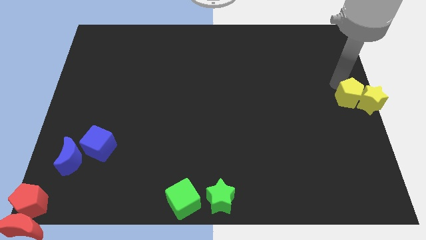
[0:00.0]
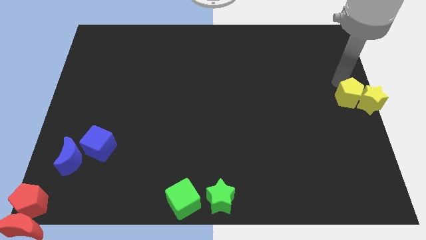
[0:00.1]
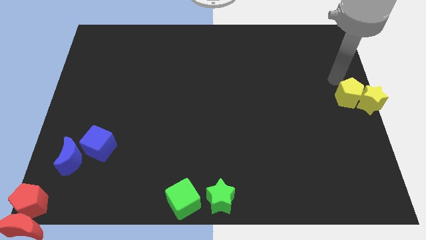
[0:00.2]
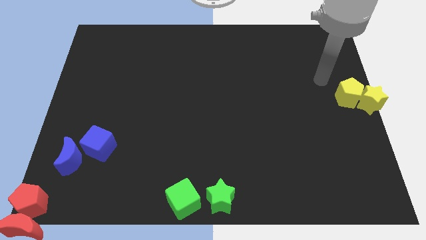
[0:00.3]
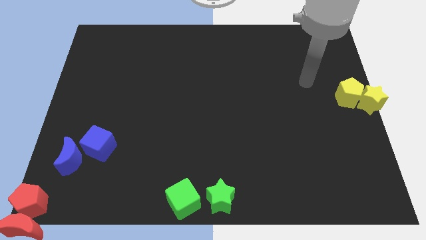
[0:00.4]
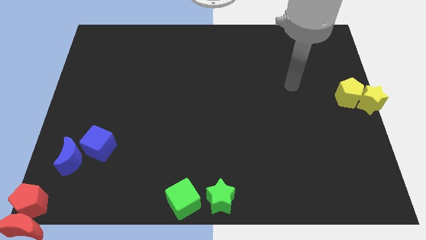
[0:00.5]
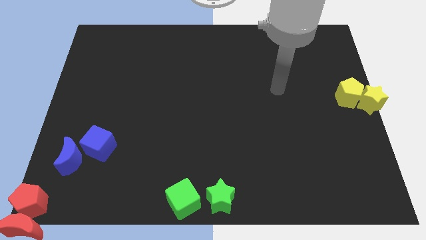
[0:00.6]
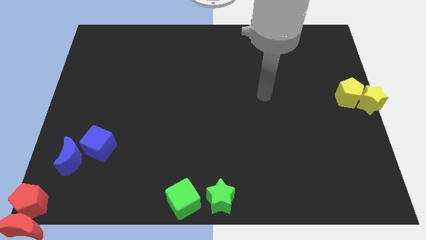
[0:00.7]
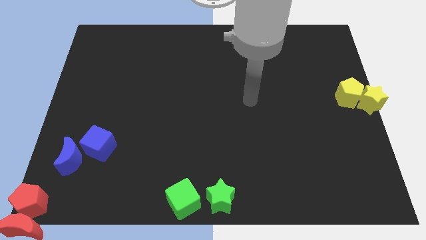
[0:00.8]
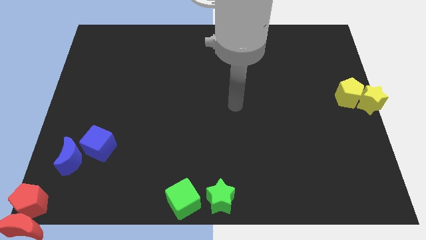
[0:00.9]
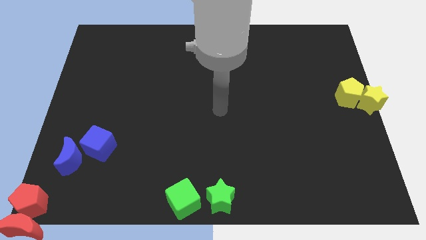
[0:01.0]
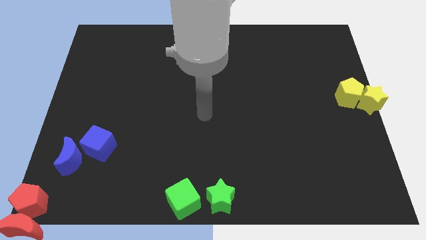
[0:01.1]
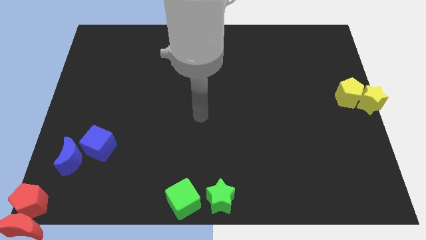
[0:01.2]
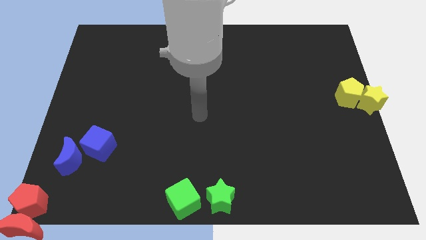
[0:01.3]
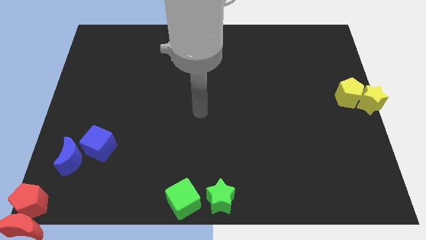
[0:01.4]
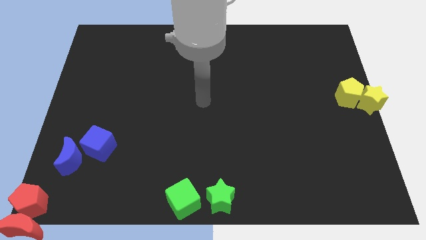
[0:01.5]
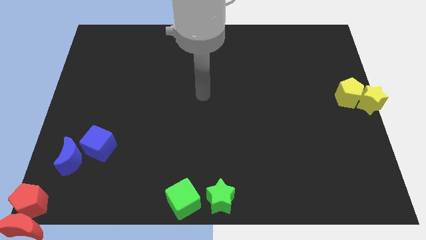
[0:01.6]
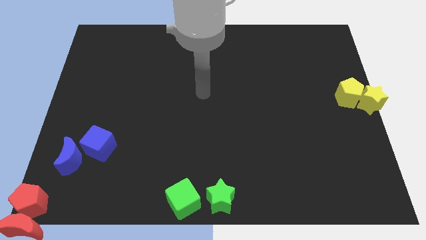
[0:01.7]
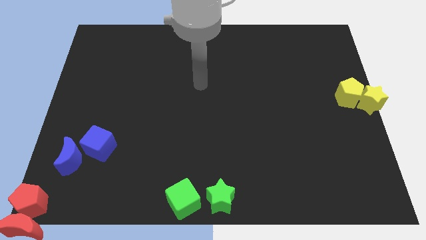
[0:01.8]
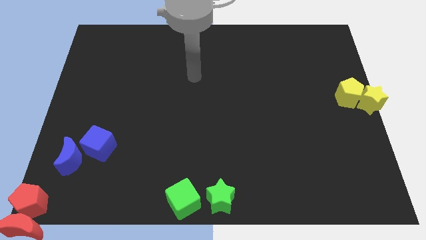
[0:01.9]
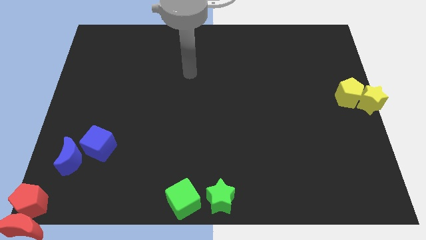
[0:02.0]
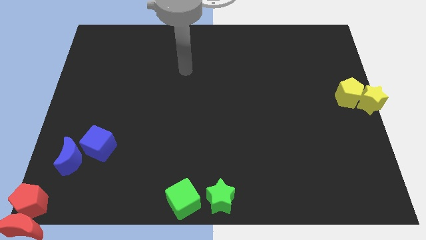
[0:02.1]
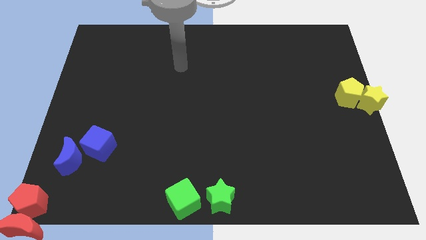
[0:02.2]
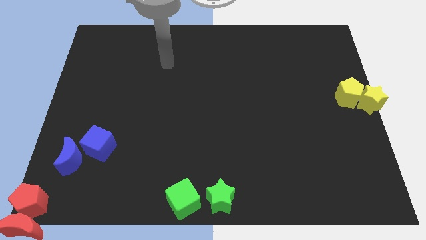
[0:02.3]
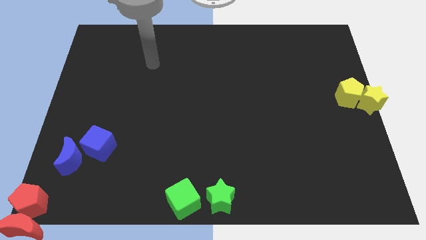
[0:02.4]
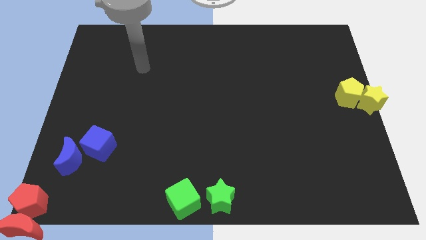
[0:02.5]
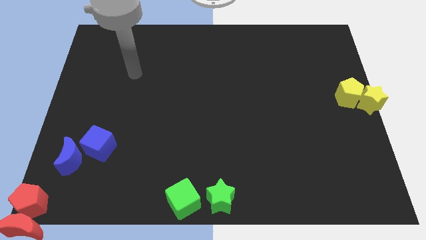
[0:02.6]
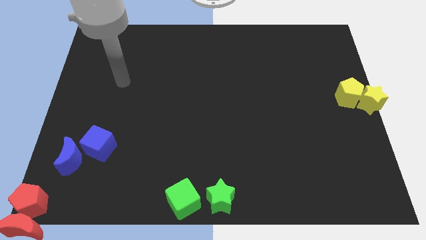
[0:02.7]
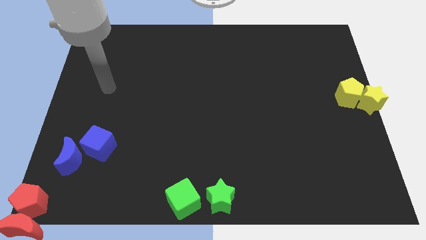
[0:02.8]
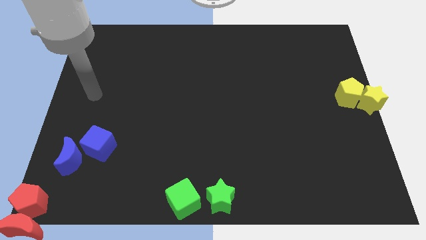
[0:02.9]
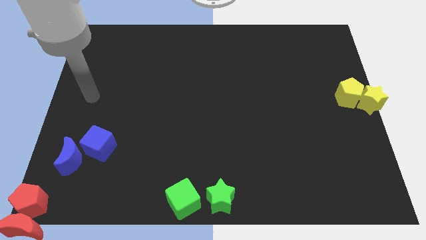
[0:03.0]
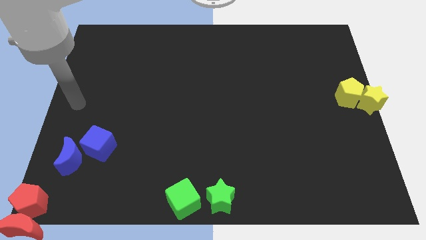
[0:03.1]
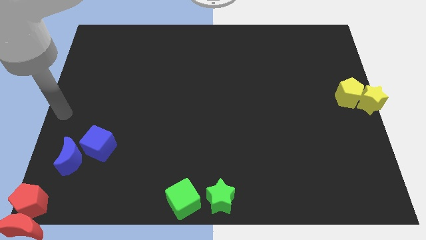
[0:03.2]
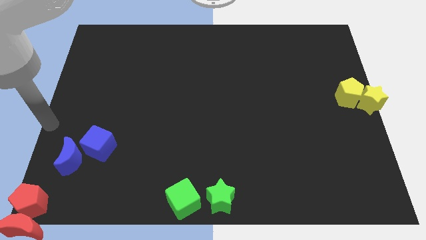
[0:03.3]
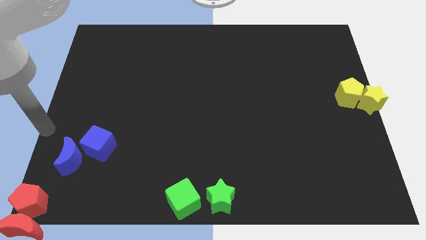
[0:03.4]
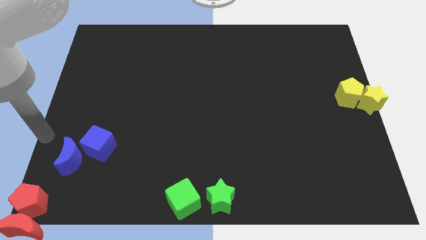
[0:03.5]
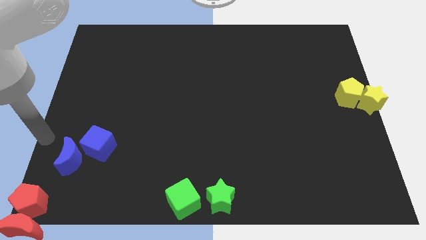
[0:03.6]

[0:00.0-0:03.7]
move the arm to the left of blue crescent

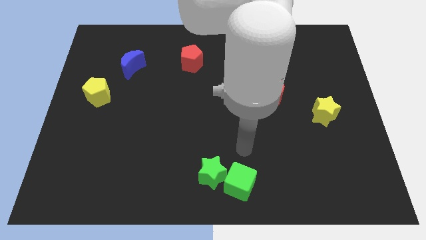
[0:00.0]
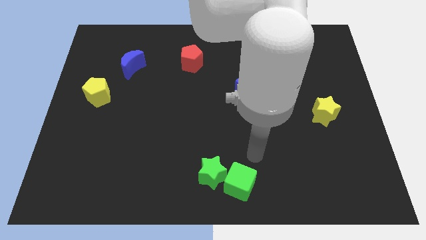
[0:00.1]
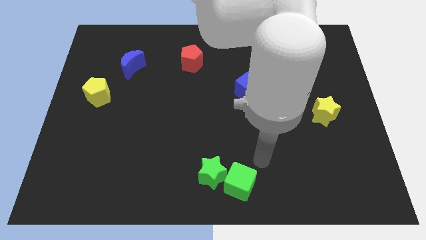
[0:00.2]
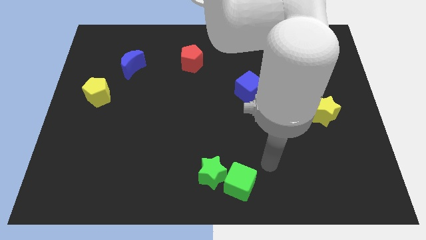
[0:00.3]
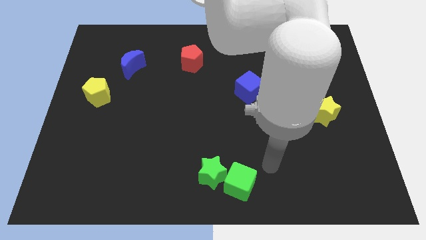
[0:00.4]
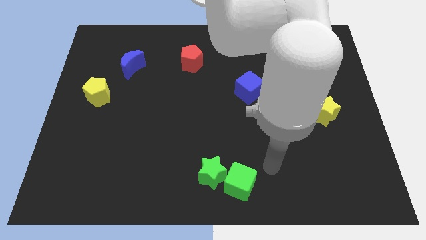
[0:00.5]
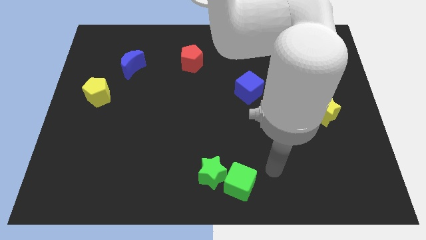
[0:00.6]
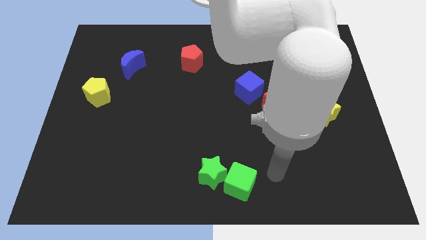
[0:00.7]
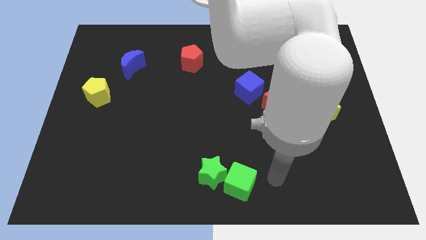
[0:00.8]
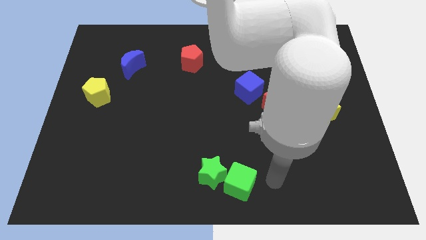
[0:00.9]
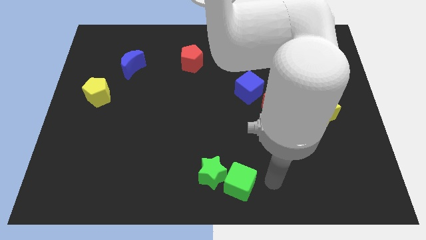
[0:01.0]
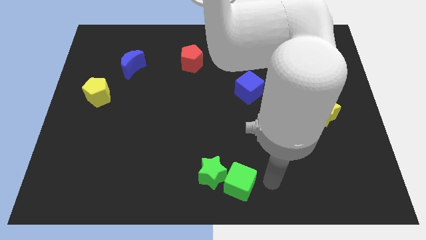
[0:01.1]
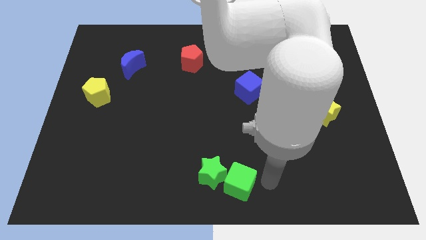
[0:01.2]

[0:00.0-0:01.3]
move the arm right to the green cube

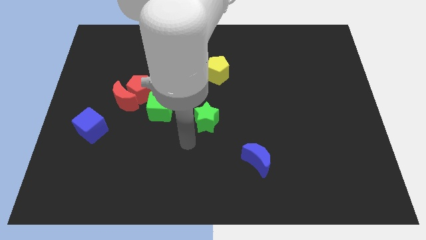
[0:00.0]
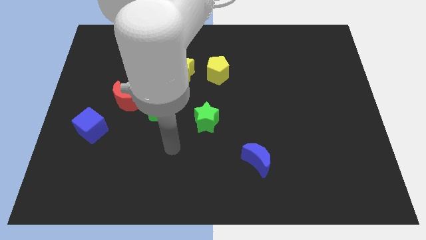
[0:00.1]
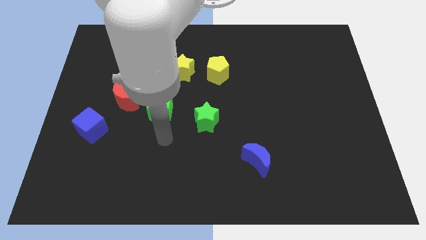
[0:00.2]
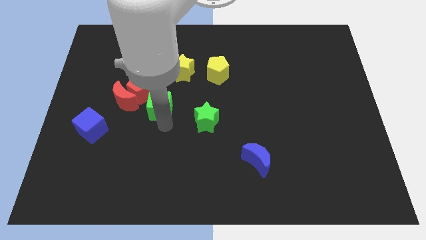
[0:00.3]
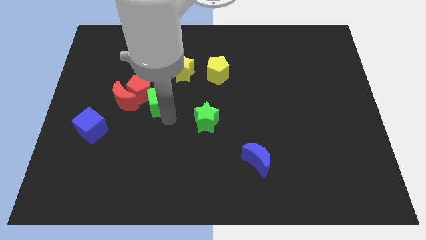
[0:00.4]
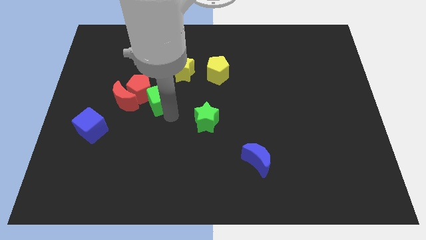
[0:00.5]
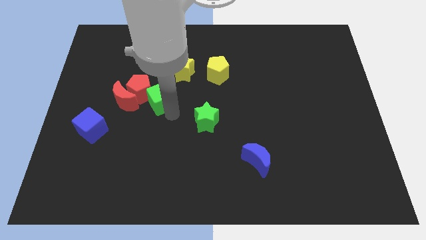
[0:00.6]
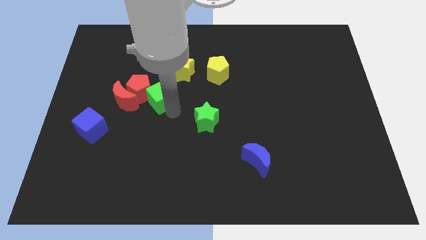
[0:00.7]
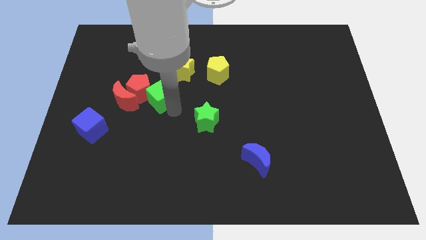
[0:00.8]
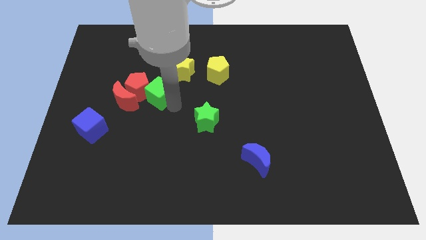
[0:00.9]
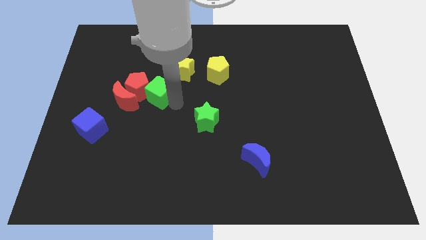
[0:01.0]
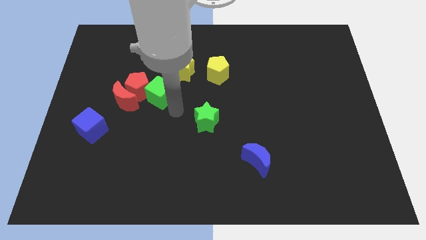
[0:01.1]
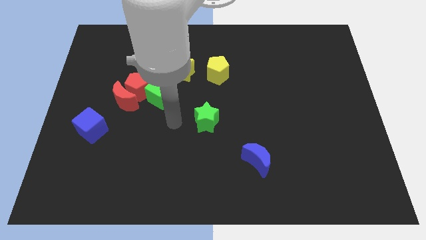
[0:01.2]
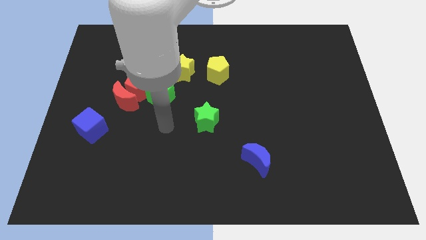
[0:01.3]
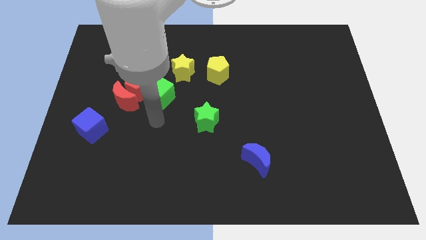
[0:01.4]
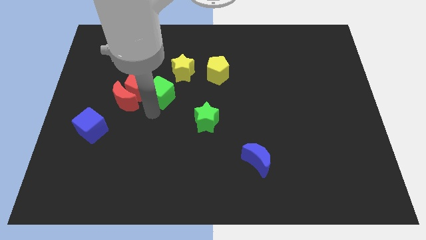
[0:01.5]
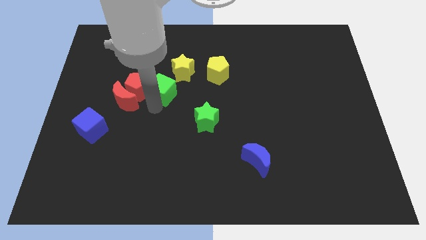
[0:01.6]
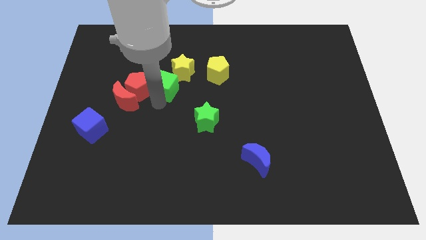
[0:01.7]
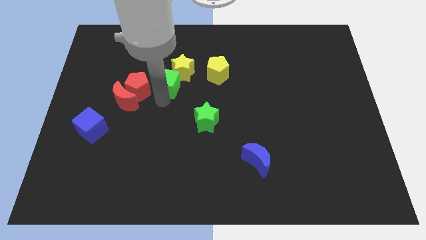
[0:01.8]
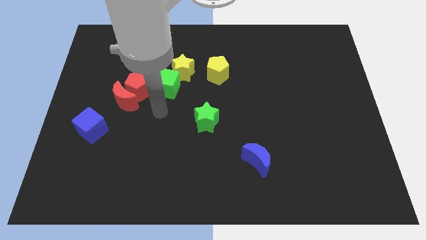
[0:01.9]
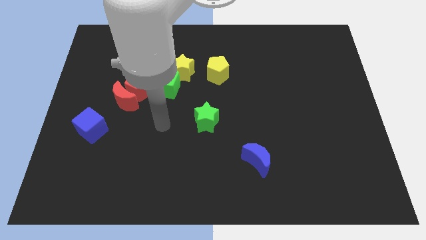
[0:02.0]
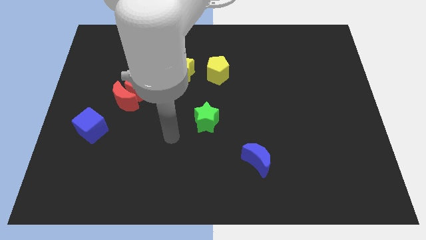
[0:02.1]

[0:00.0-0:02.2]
push the green cube to the right of the red pentagon

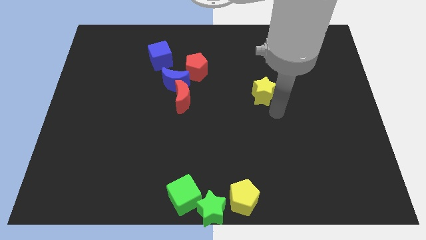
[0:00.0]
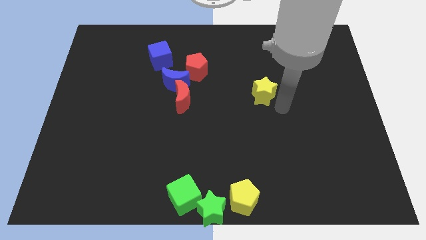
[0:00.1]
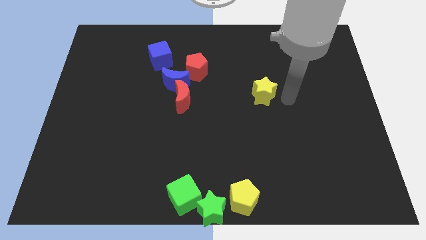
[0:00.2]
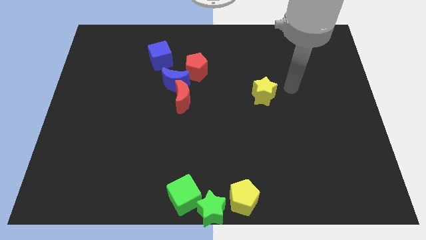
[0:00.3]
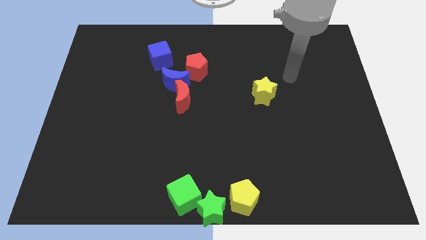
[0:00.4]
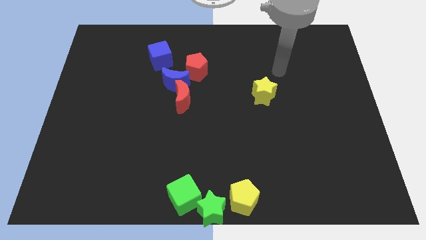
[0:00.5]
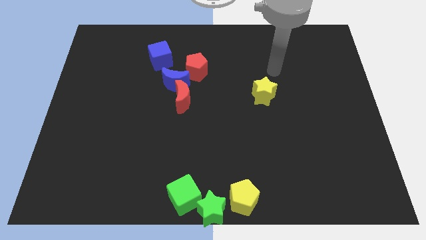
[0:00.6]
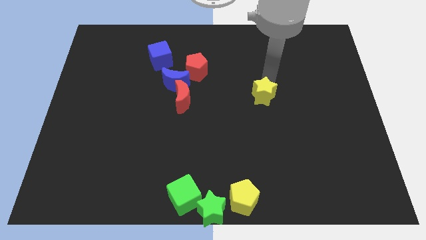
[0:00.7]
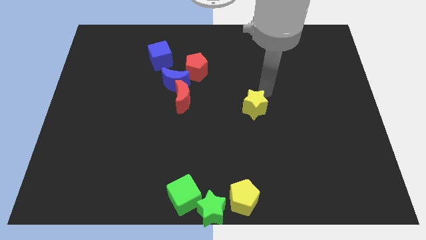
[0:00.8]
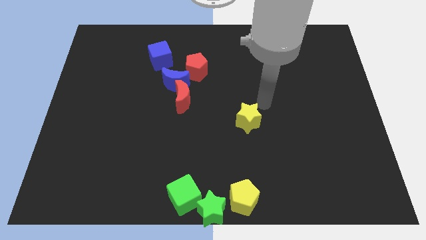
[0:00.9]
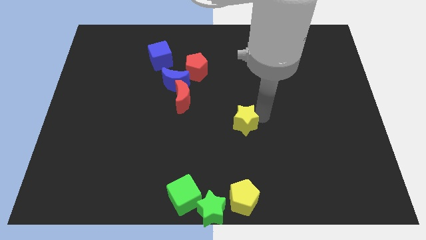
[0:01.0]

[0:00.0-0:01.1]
place the yellow star above the yellow pentagon

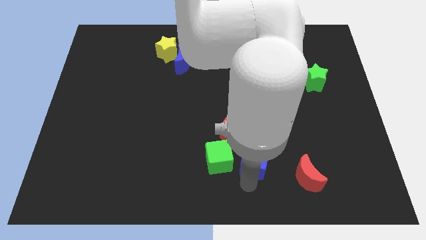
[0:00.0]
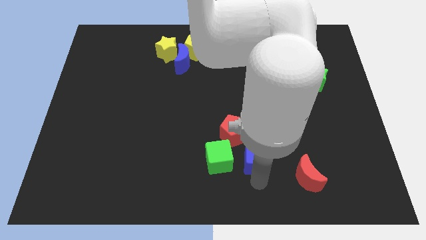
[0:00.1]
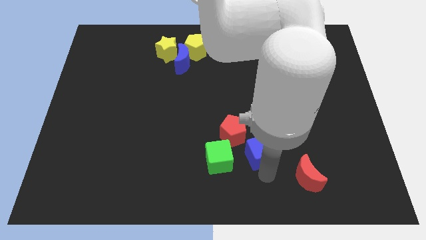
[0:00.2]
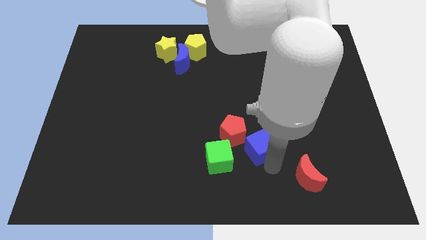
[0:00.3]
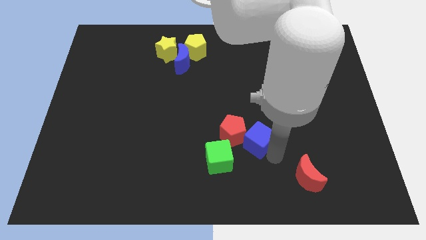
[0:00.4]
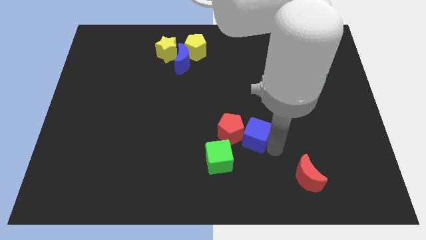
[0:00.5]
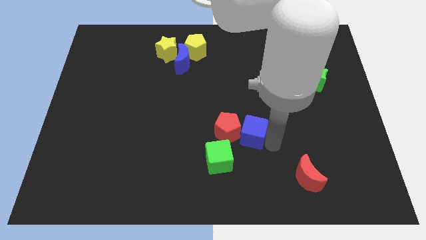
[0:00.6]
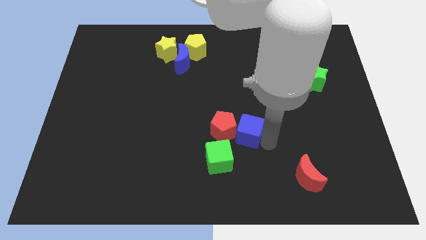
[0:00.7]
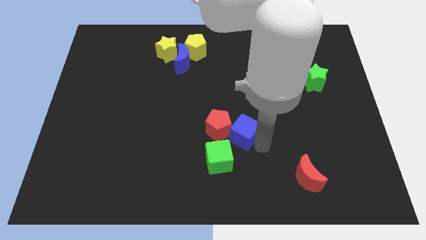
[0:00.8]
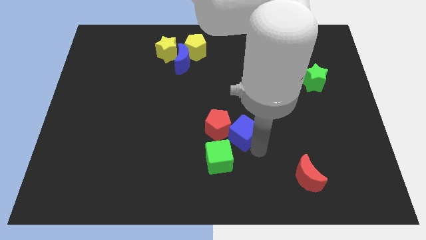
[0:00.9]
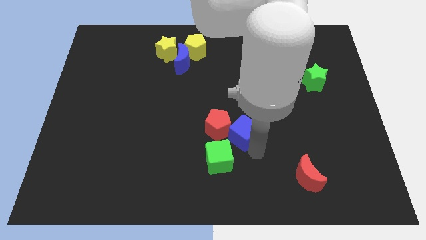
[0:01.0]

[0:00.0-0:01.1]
slide blue cube into red pentagon
